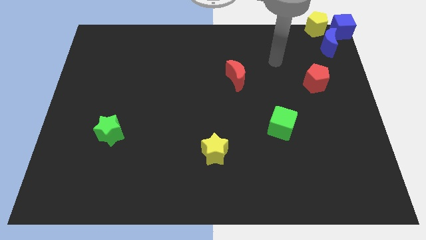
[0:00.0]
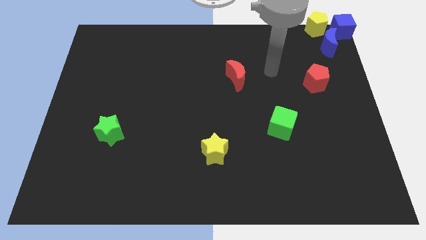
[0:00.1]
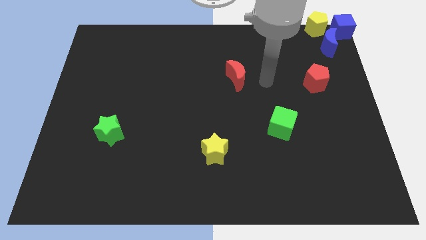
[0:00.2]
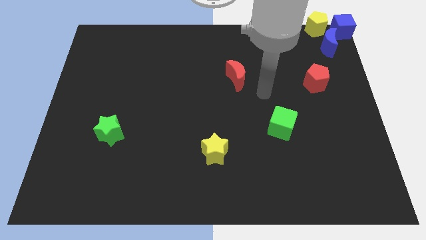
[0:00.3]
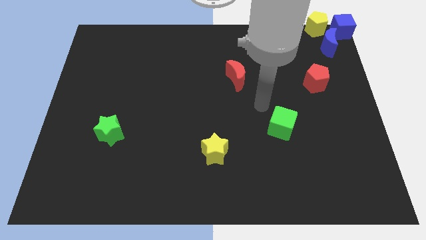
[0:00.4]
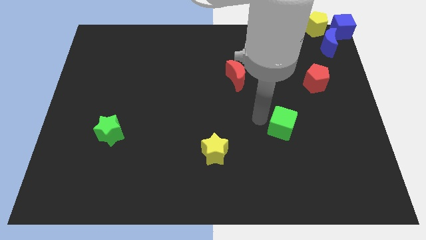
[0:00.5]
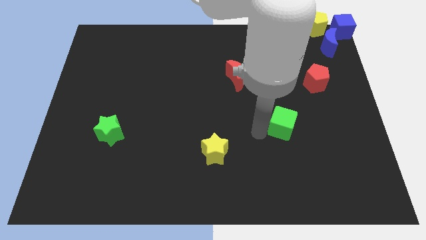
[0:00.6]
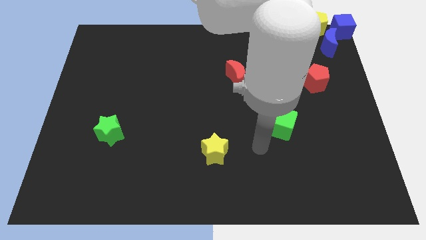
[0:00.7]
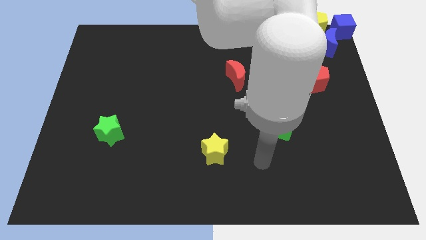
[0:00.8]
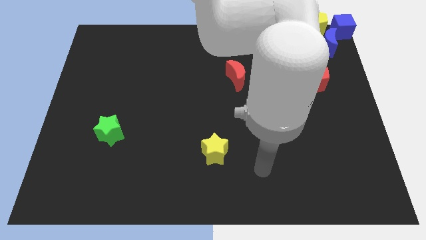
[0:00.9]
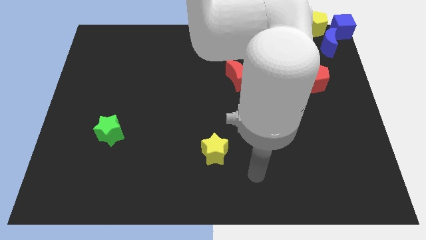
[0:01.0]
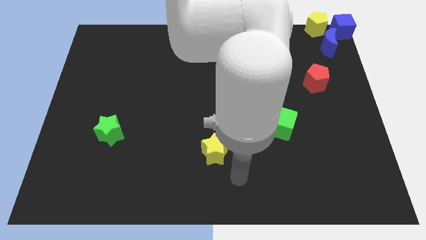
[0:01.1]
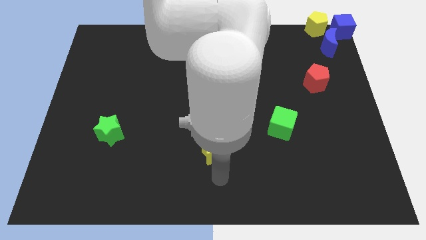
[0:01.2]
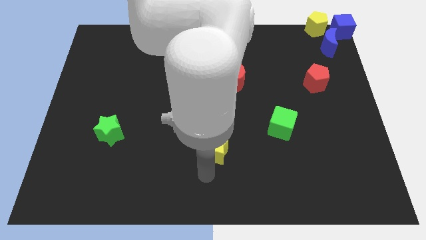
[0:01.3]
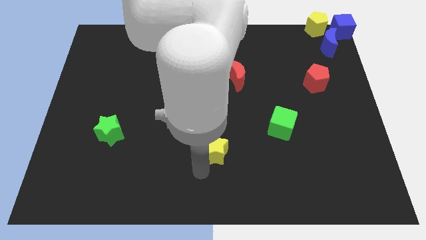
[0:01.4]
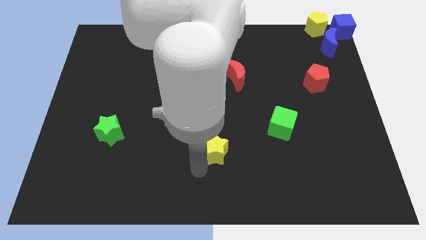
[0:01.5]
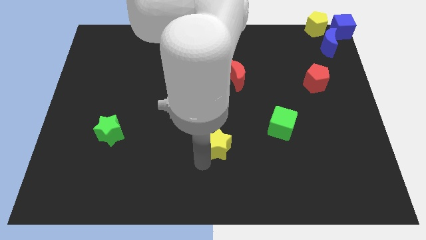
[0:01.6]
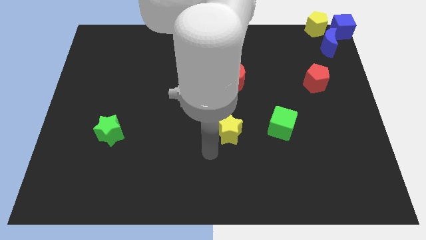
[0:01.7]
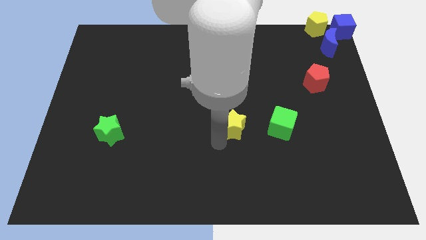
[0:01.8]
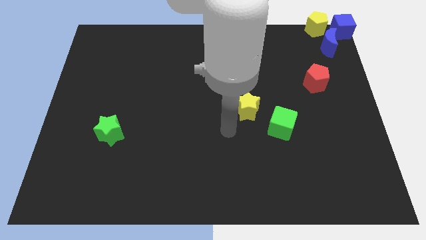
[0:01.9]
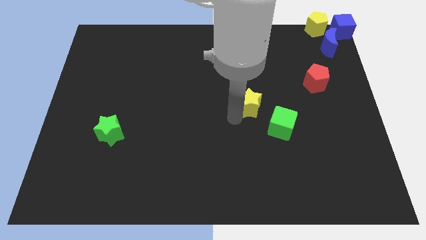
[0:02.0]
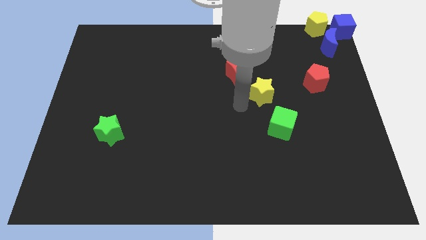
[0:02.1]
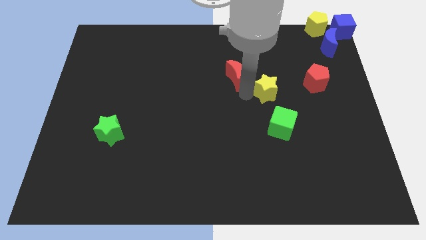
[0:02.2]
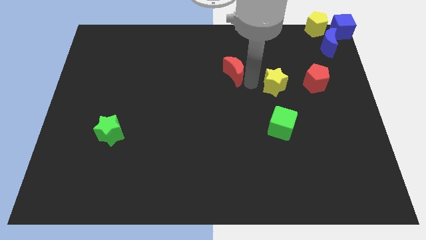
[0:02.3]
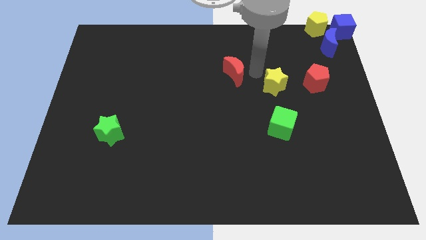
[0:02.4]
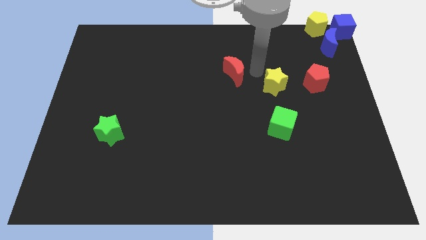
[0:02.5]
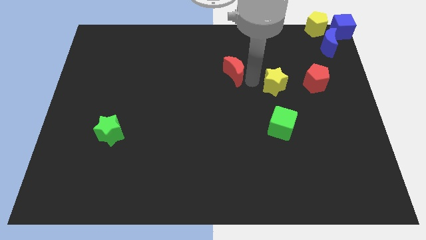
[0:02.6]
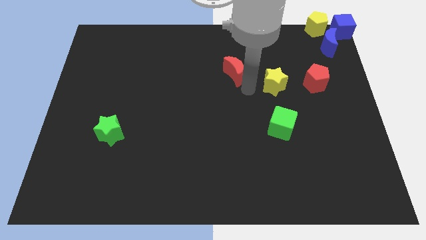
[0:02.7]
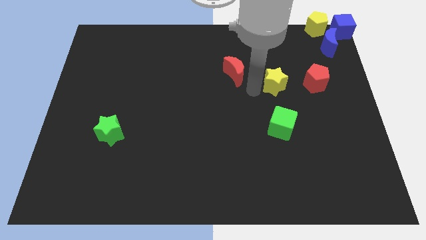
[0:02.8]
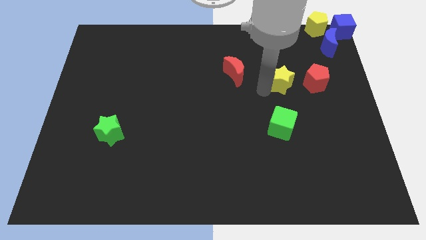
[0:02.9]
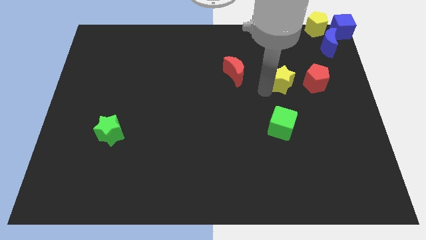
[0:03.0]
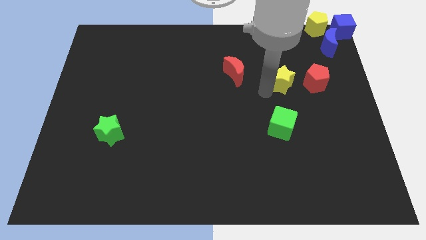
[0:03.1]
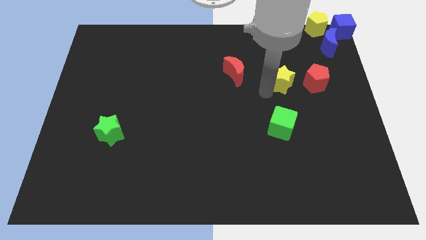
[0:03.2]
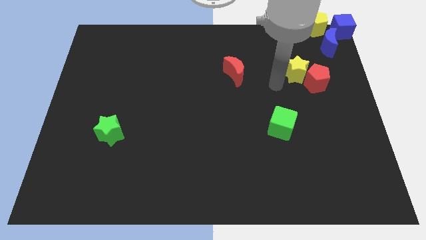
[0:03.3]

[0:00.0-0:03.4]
move the yellow star to the left side of the red pentagon

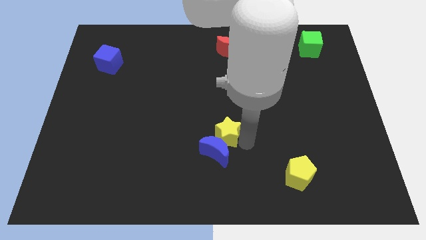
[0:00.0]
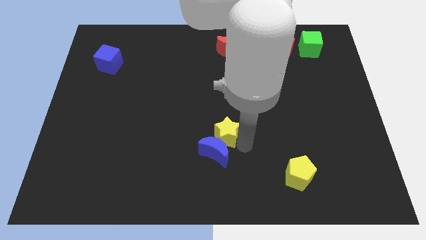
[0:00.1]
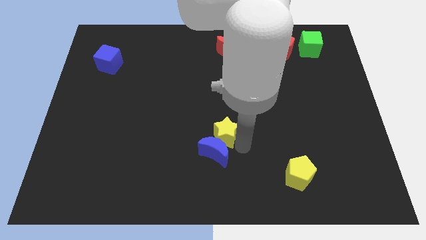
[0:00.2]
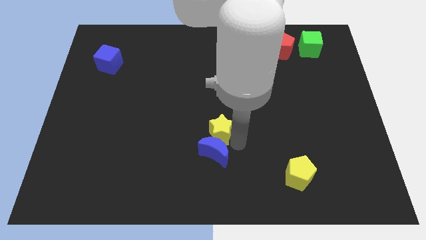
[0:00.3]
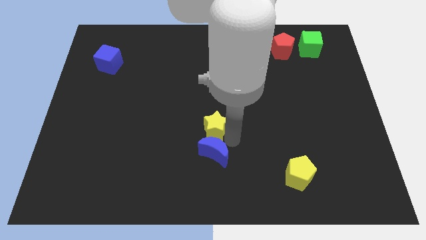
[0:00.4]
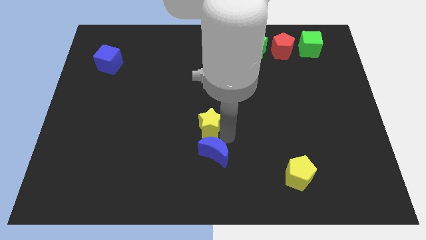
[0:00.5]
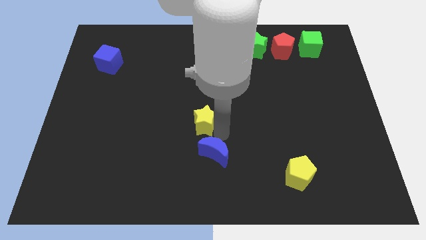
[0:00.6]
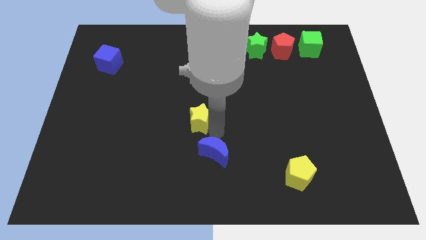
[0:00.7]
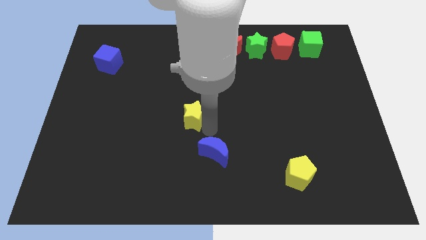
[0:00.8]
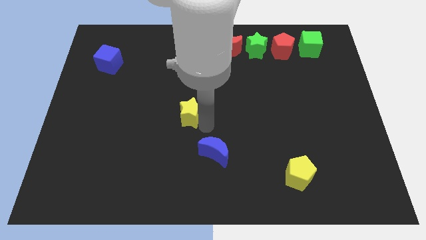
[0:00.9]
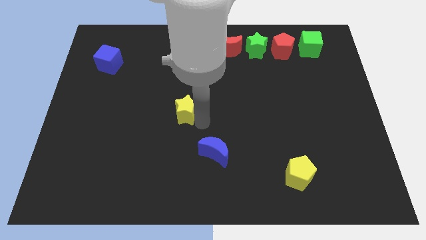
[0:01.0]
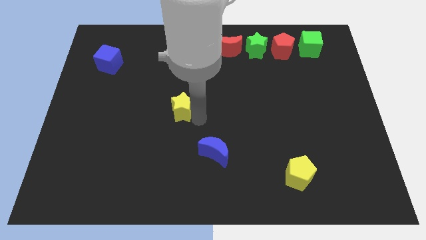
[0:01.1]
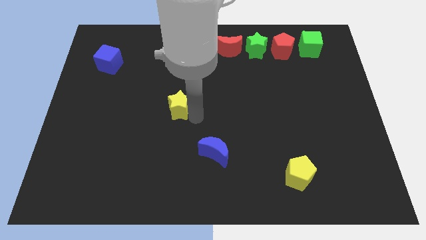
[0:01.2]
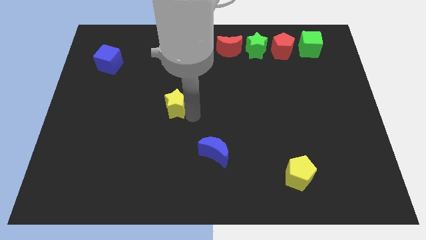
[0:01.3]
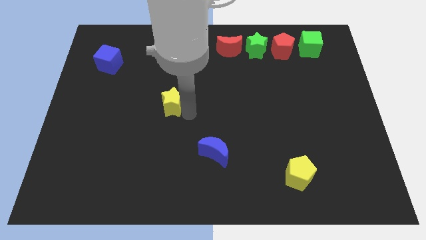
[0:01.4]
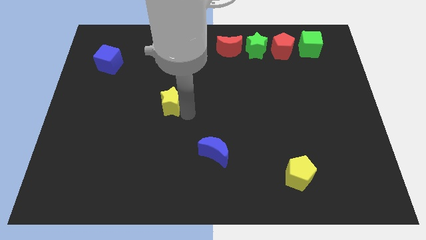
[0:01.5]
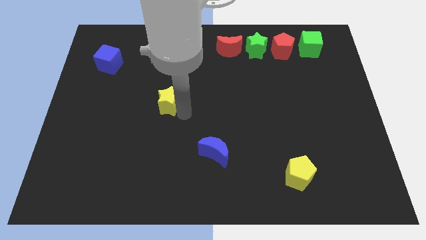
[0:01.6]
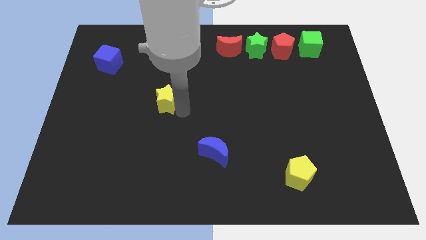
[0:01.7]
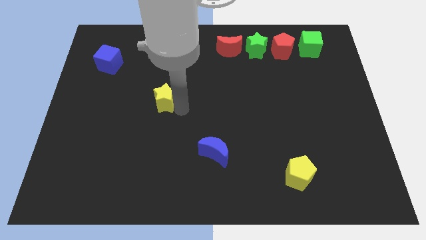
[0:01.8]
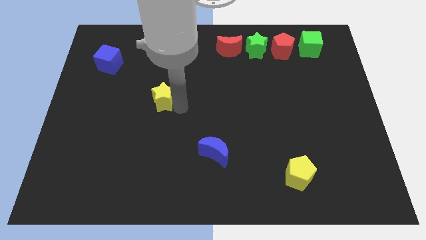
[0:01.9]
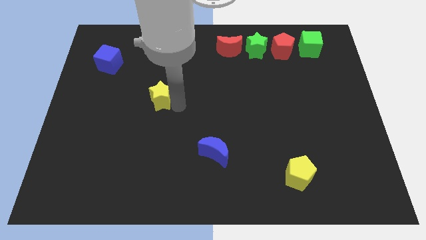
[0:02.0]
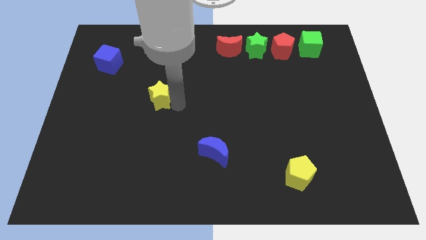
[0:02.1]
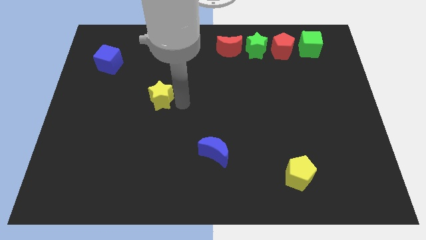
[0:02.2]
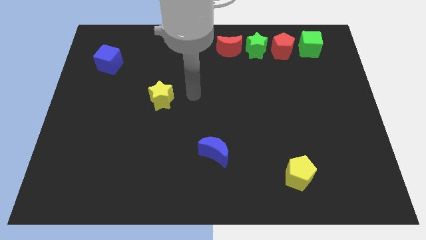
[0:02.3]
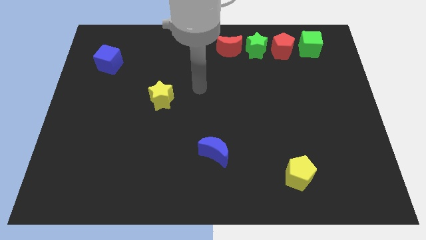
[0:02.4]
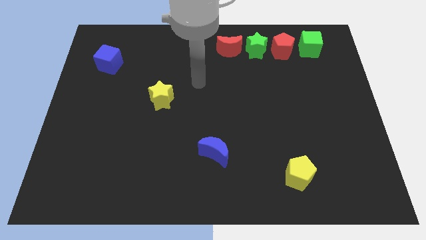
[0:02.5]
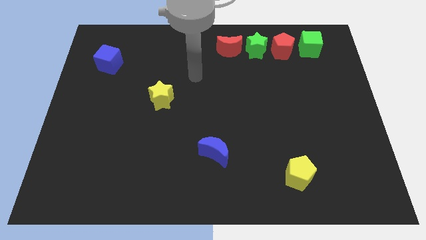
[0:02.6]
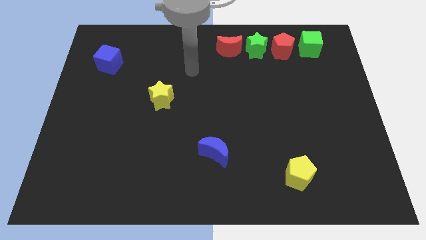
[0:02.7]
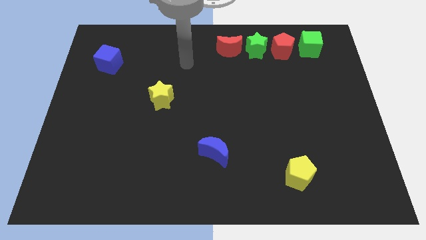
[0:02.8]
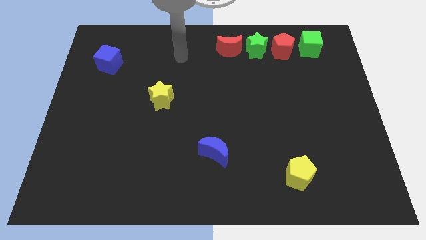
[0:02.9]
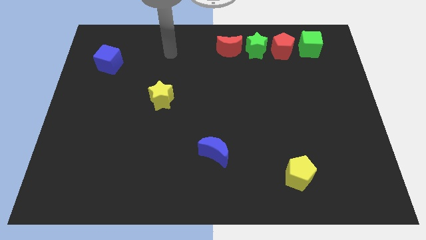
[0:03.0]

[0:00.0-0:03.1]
separate yellow star from blue moon

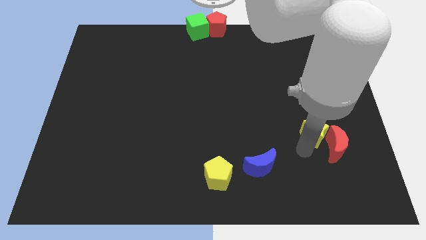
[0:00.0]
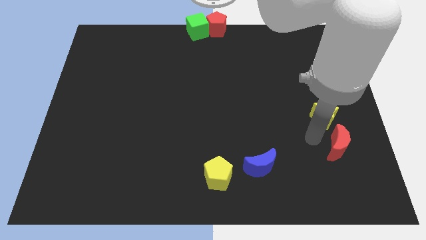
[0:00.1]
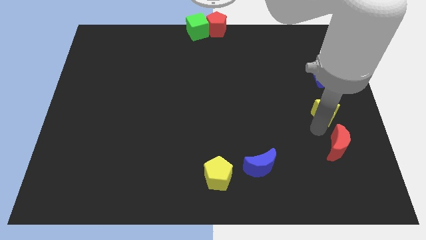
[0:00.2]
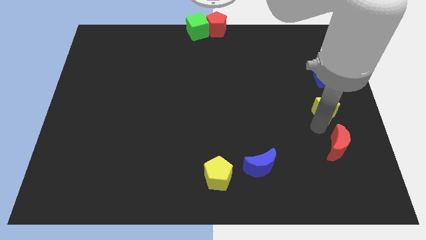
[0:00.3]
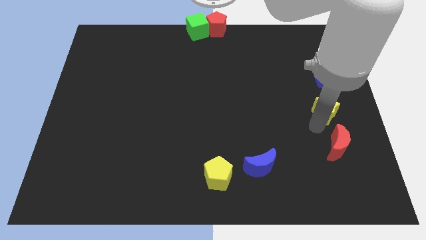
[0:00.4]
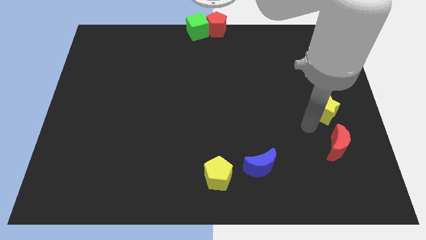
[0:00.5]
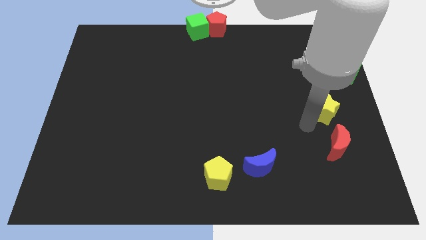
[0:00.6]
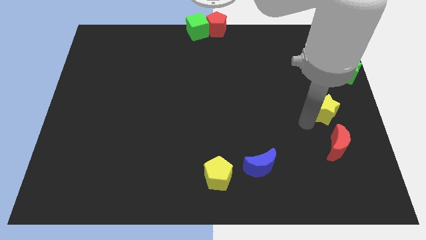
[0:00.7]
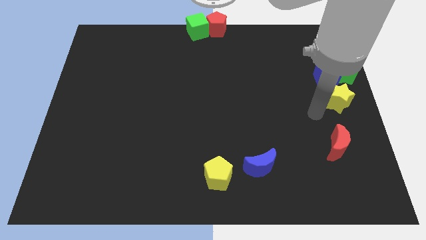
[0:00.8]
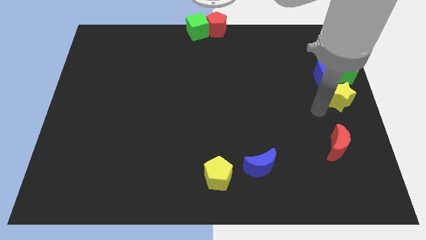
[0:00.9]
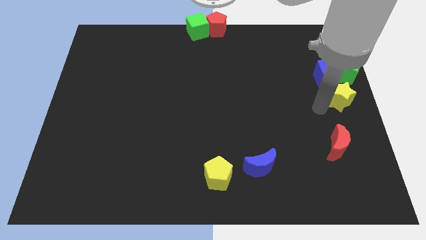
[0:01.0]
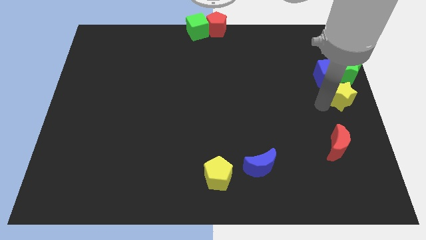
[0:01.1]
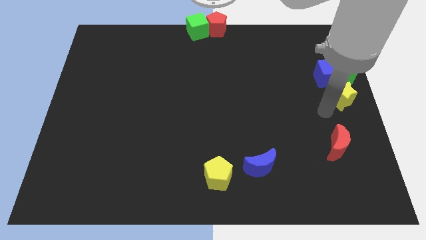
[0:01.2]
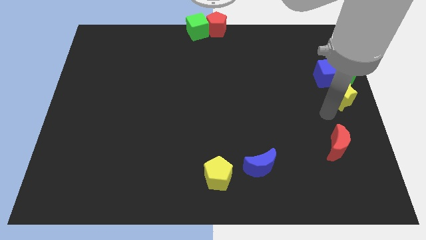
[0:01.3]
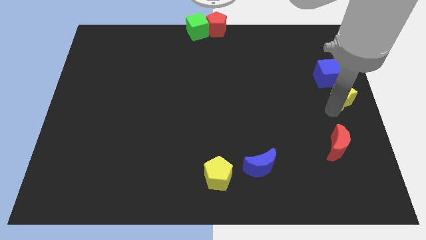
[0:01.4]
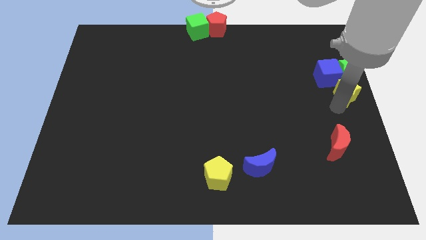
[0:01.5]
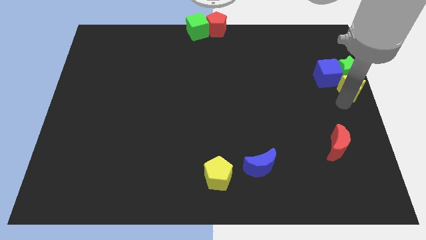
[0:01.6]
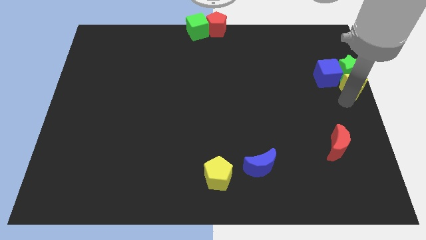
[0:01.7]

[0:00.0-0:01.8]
push the yellow star to the bottom of the green star

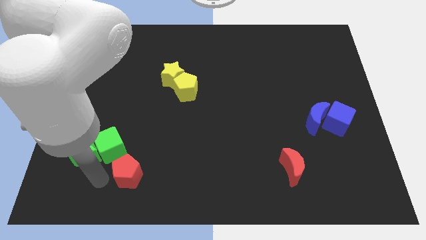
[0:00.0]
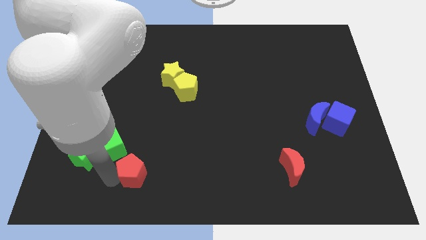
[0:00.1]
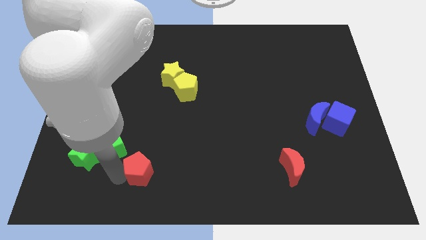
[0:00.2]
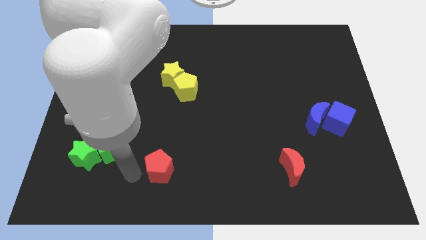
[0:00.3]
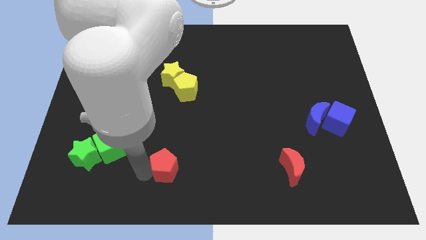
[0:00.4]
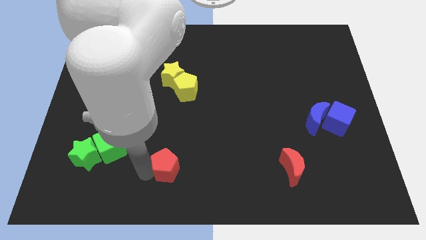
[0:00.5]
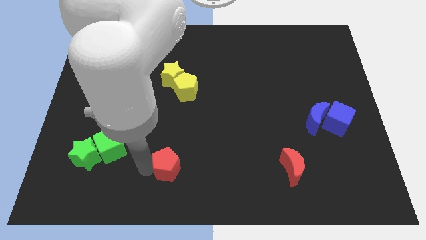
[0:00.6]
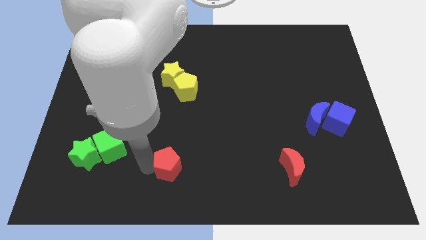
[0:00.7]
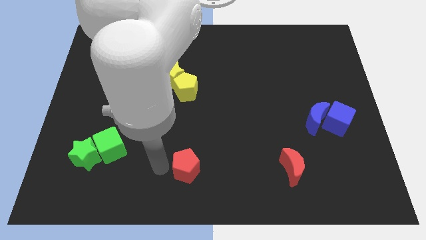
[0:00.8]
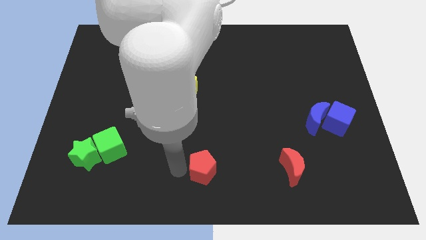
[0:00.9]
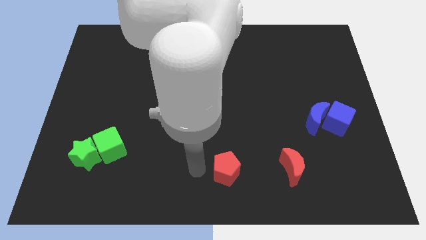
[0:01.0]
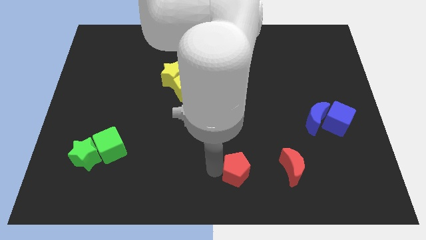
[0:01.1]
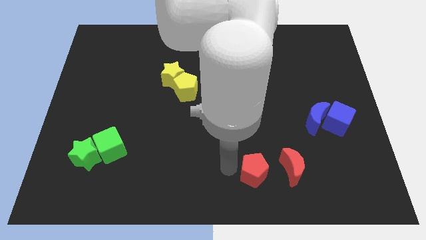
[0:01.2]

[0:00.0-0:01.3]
move the red pentagon parallel to left of the red crescent
